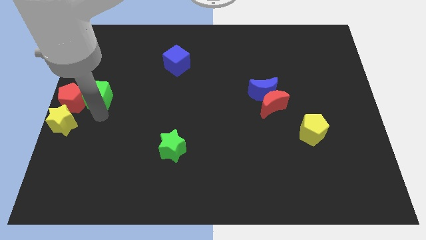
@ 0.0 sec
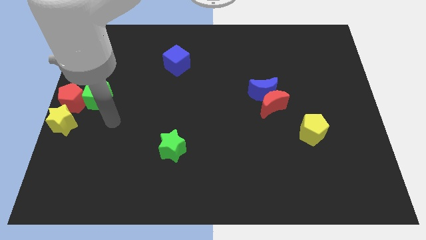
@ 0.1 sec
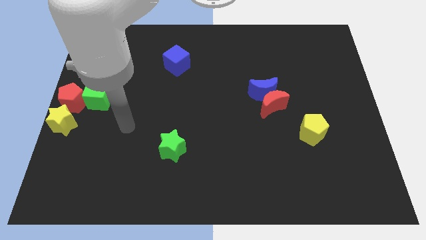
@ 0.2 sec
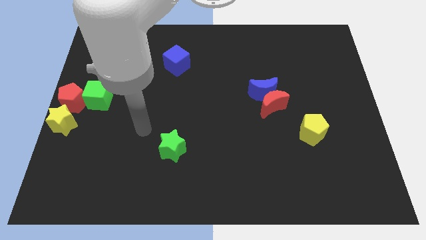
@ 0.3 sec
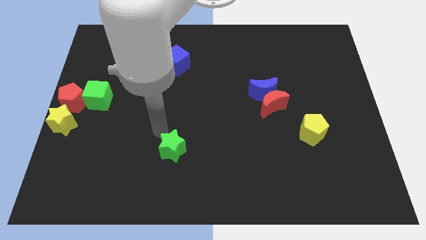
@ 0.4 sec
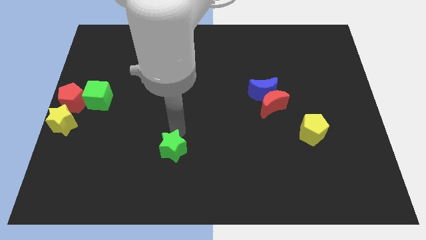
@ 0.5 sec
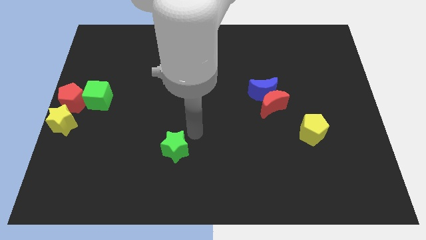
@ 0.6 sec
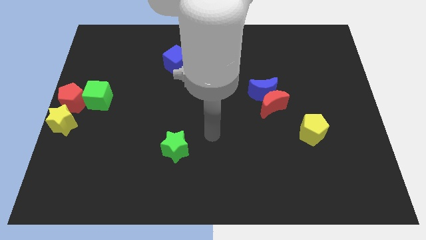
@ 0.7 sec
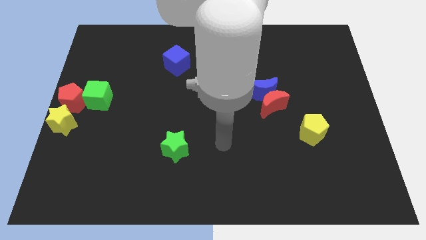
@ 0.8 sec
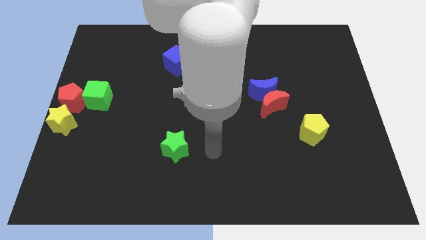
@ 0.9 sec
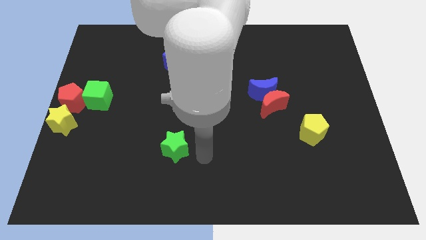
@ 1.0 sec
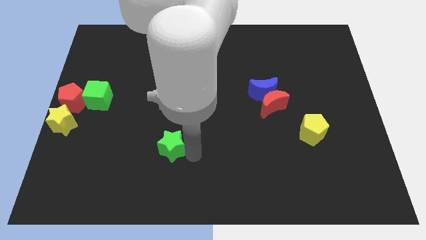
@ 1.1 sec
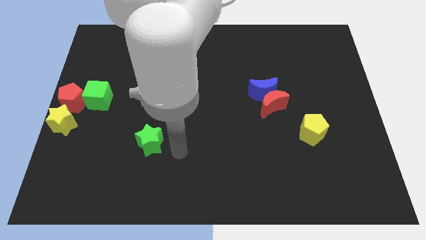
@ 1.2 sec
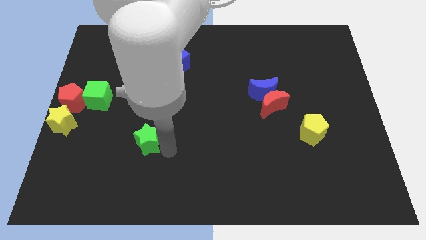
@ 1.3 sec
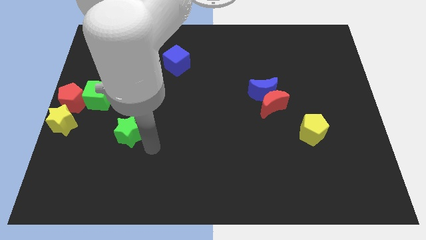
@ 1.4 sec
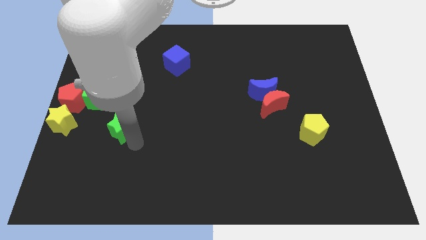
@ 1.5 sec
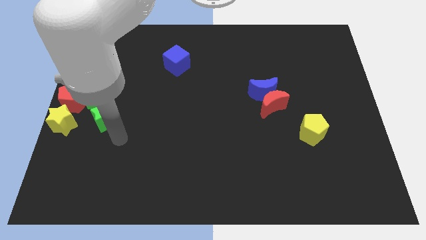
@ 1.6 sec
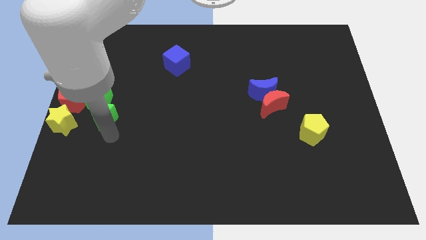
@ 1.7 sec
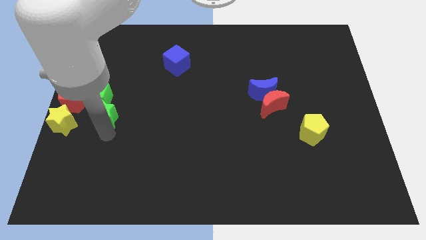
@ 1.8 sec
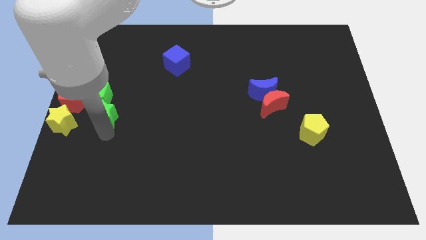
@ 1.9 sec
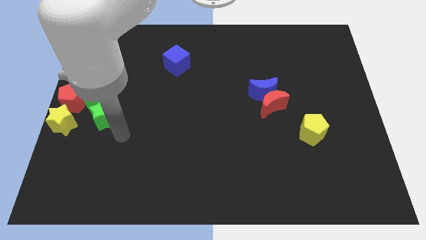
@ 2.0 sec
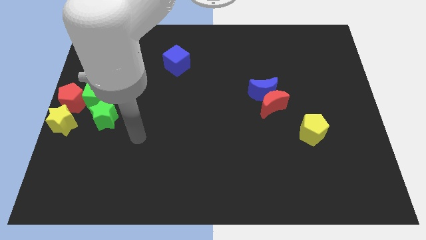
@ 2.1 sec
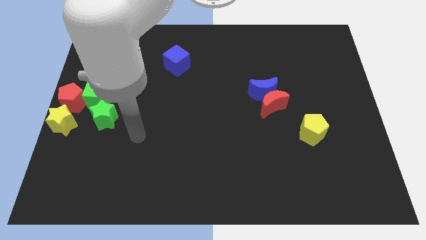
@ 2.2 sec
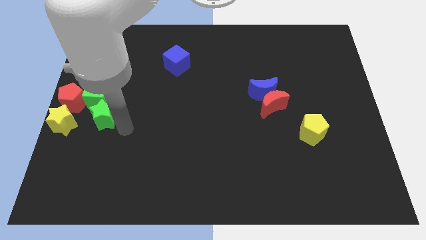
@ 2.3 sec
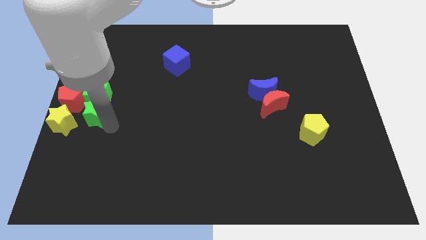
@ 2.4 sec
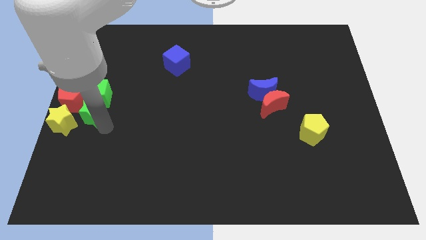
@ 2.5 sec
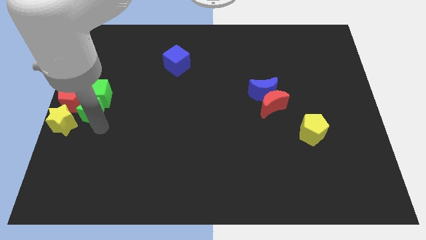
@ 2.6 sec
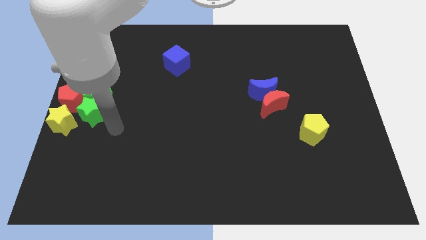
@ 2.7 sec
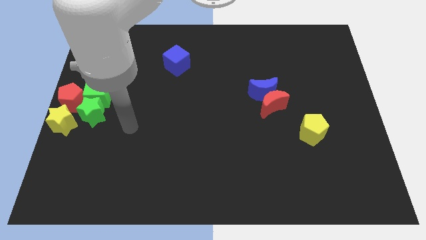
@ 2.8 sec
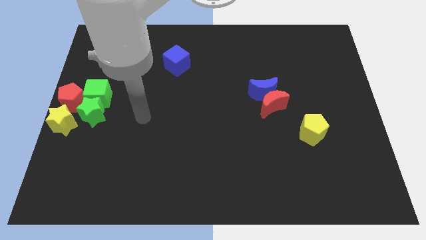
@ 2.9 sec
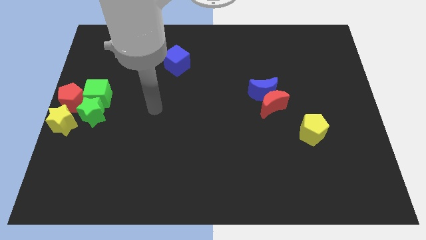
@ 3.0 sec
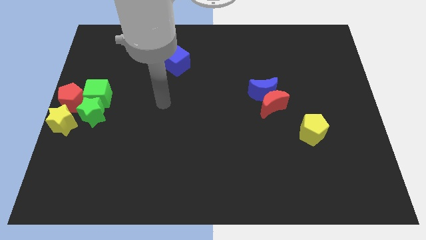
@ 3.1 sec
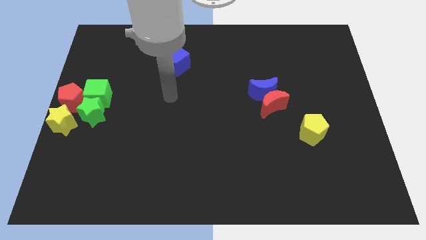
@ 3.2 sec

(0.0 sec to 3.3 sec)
move green star to the bottom of green cube

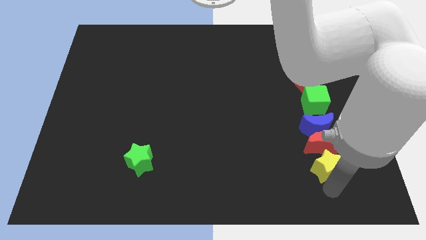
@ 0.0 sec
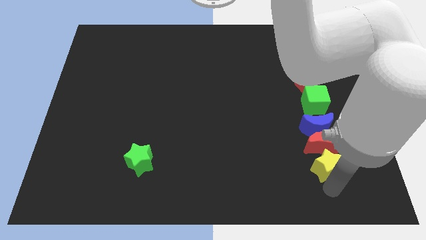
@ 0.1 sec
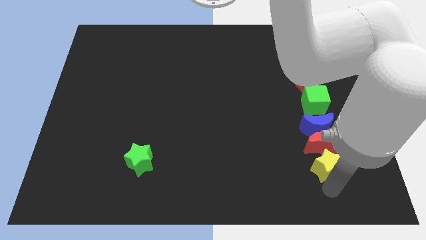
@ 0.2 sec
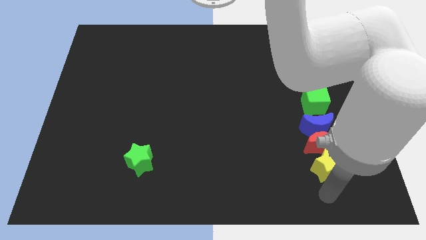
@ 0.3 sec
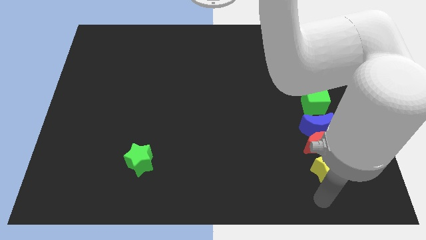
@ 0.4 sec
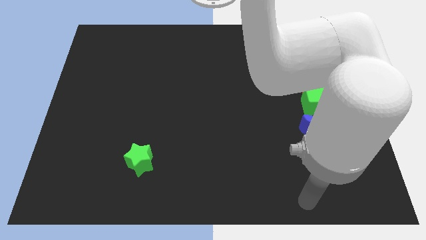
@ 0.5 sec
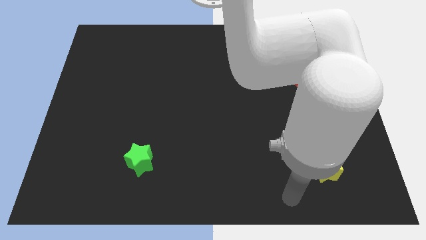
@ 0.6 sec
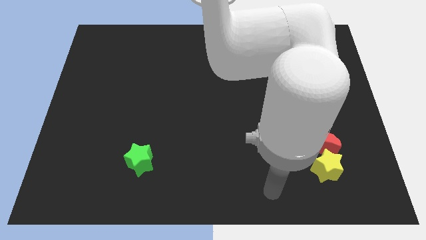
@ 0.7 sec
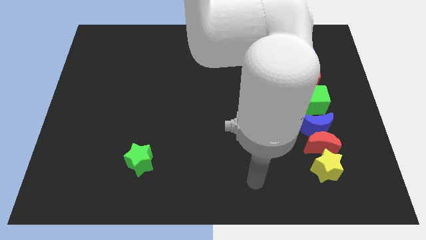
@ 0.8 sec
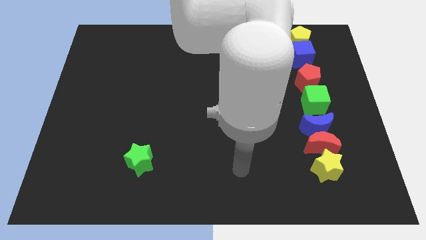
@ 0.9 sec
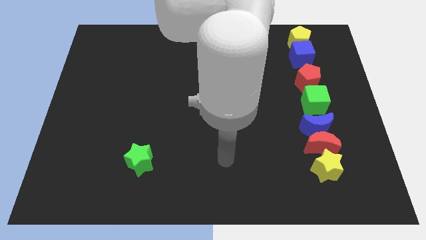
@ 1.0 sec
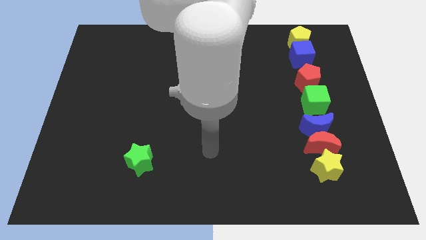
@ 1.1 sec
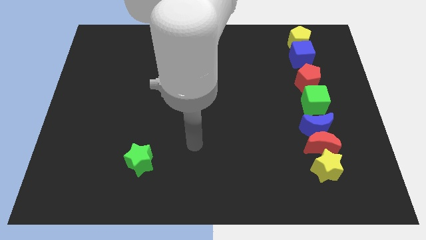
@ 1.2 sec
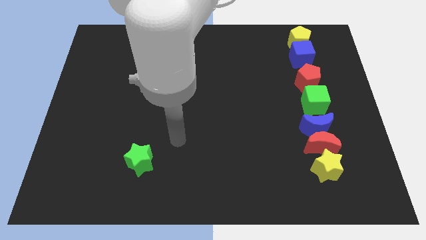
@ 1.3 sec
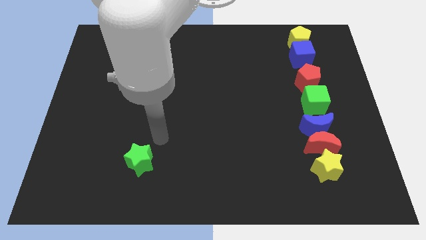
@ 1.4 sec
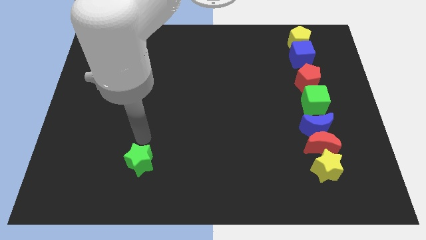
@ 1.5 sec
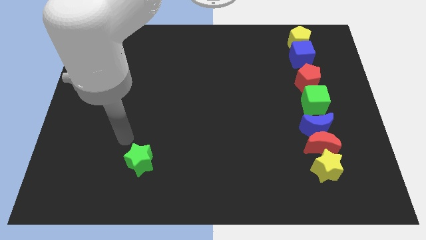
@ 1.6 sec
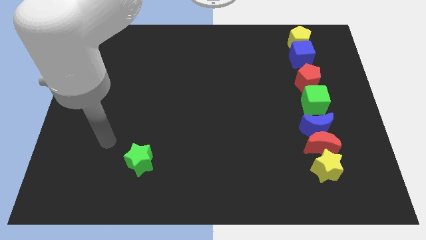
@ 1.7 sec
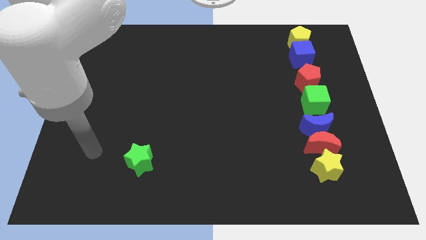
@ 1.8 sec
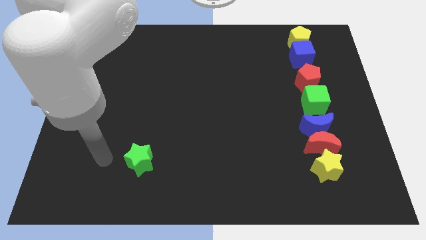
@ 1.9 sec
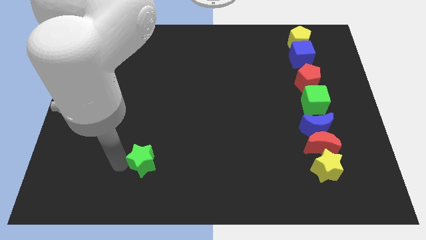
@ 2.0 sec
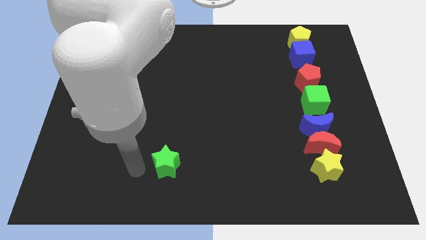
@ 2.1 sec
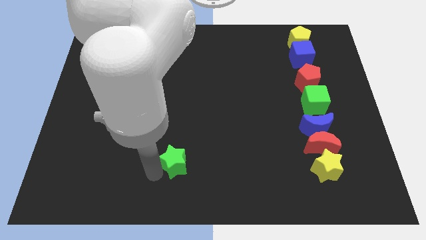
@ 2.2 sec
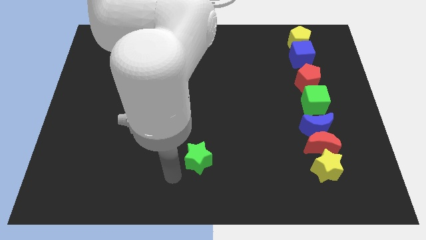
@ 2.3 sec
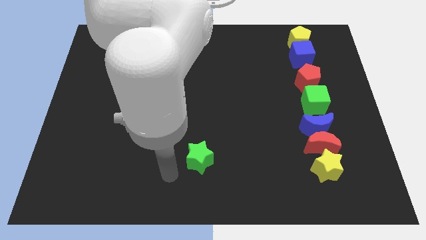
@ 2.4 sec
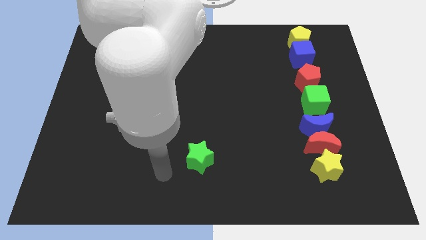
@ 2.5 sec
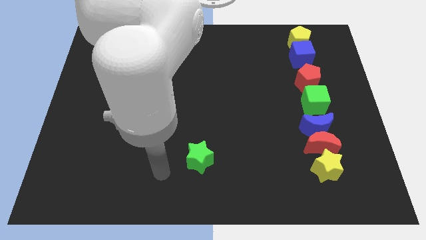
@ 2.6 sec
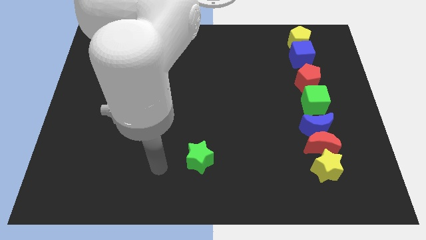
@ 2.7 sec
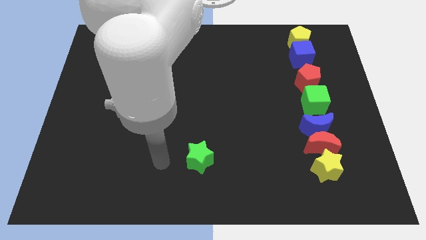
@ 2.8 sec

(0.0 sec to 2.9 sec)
move arm near green star

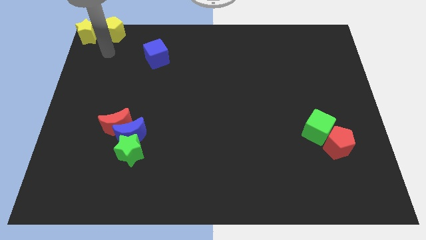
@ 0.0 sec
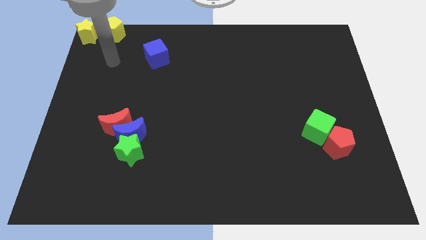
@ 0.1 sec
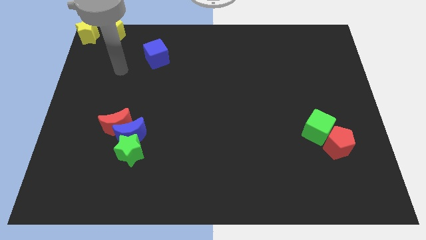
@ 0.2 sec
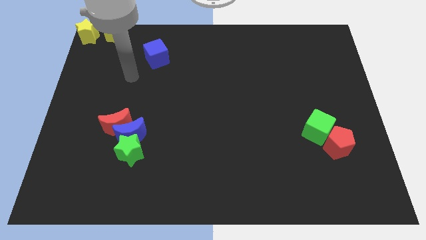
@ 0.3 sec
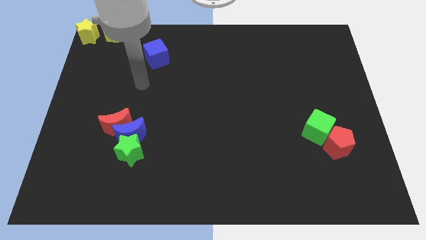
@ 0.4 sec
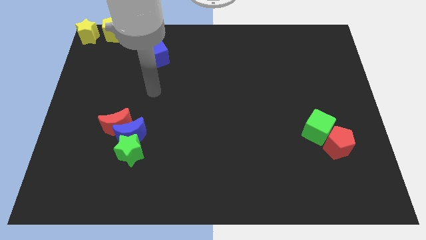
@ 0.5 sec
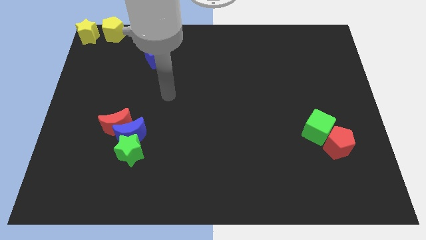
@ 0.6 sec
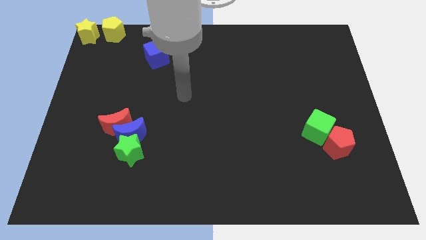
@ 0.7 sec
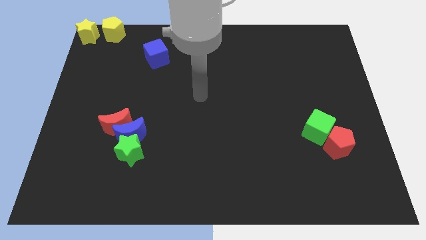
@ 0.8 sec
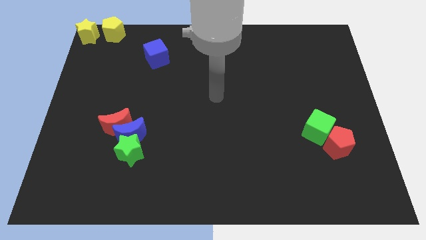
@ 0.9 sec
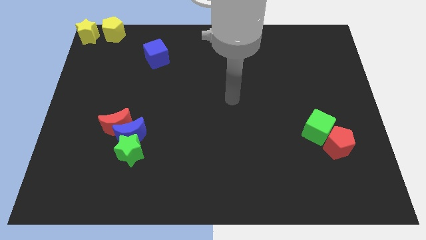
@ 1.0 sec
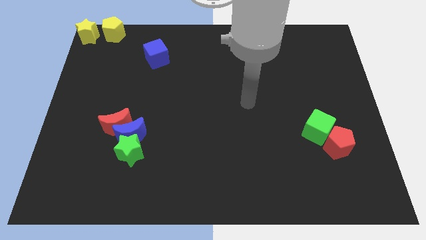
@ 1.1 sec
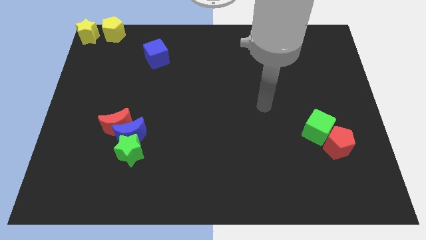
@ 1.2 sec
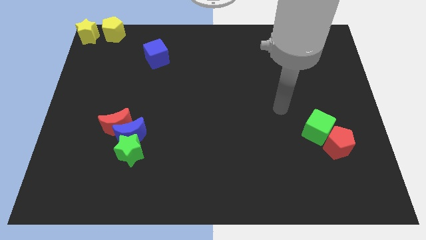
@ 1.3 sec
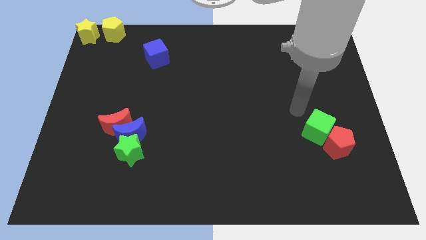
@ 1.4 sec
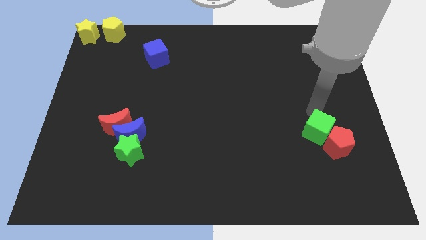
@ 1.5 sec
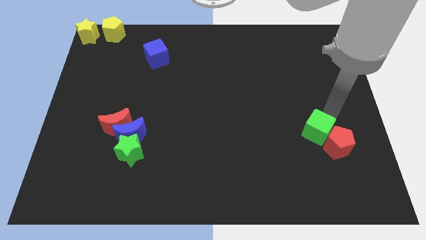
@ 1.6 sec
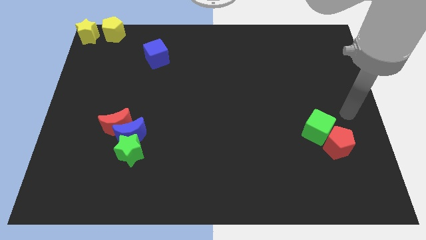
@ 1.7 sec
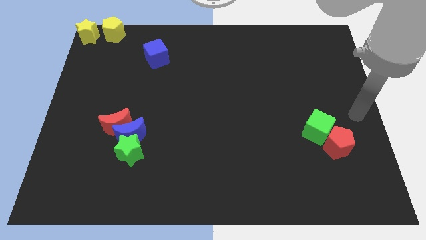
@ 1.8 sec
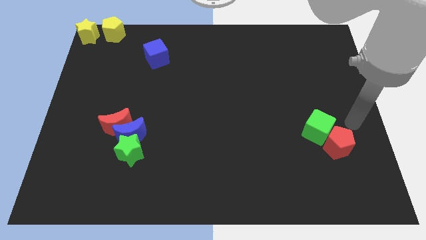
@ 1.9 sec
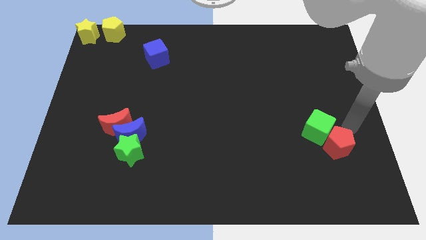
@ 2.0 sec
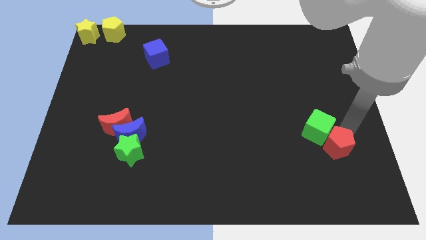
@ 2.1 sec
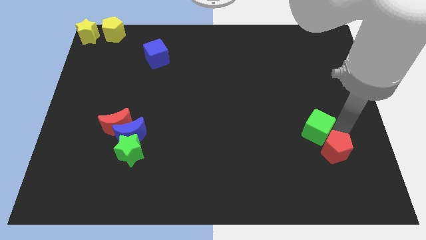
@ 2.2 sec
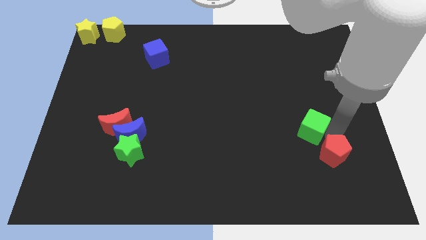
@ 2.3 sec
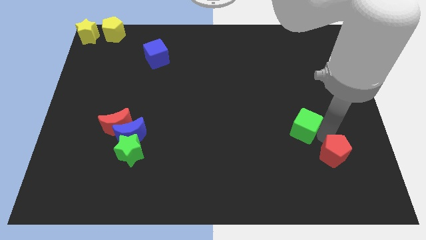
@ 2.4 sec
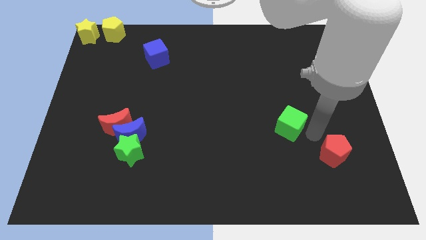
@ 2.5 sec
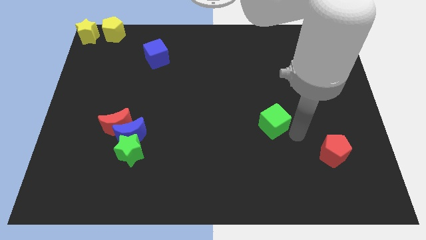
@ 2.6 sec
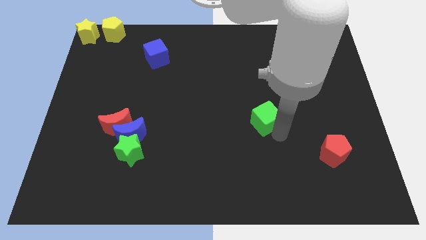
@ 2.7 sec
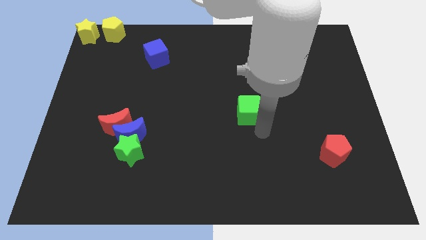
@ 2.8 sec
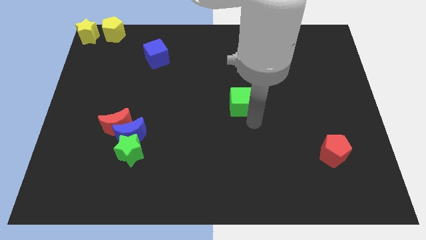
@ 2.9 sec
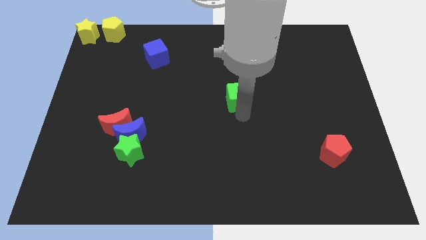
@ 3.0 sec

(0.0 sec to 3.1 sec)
move green cube to the center
